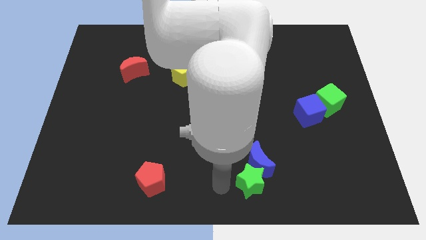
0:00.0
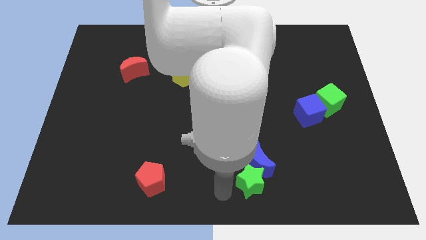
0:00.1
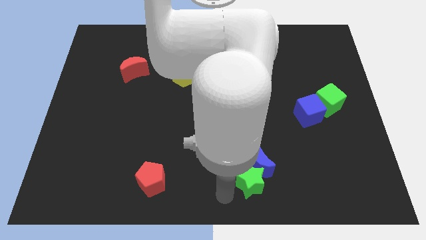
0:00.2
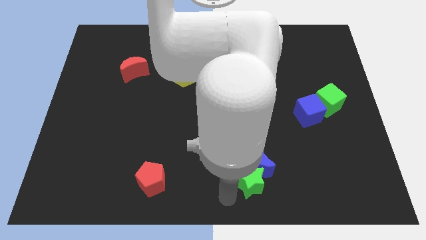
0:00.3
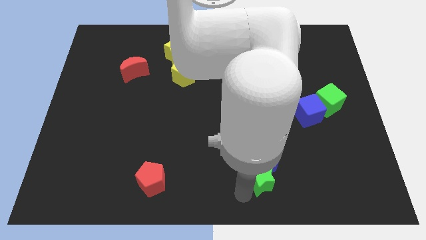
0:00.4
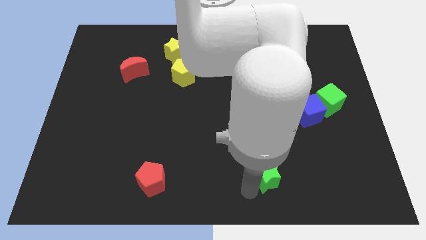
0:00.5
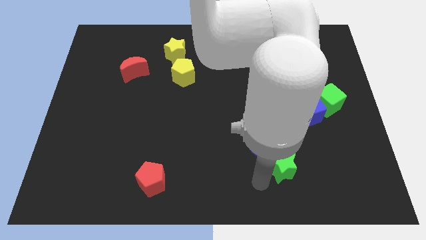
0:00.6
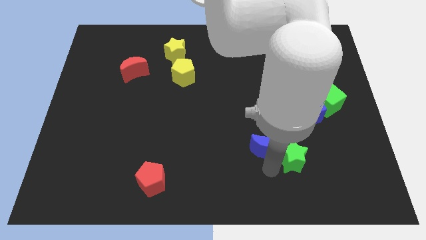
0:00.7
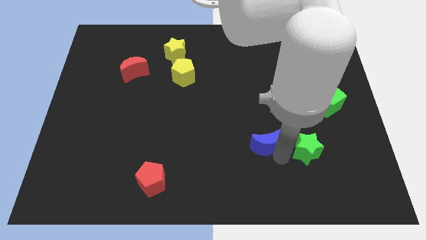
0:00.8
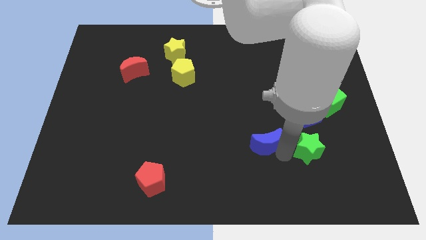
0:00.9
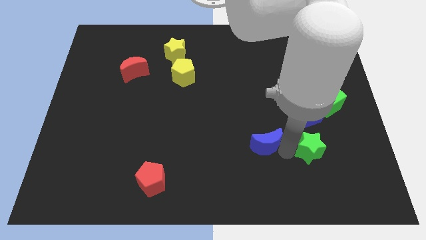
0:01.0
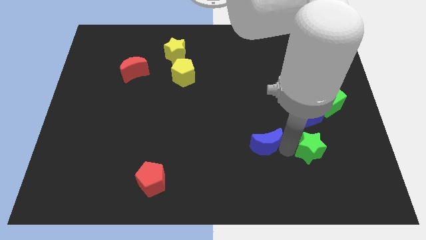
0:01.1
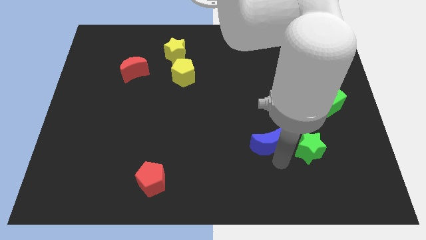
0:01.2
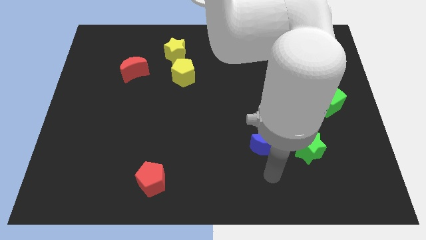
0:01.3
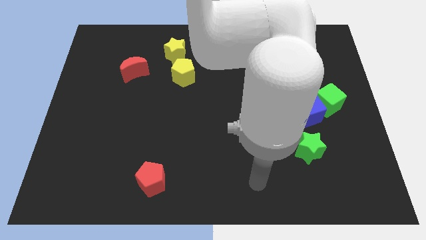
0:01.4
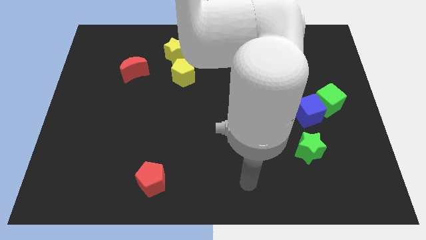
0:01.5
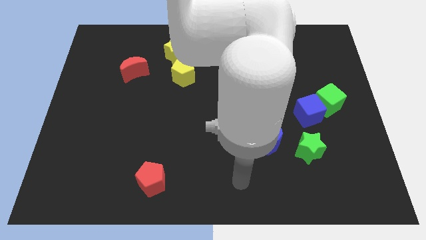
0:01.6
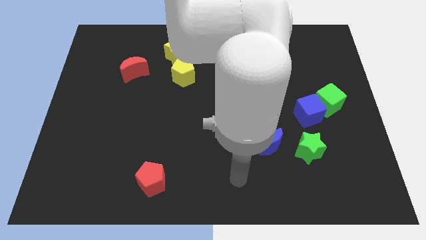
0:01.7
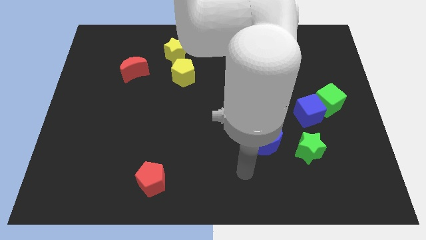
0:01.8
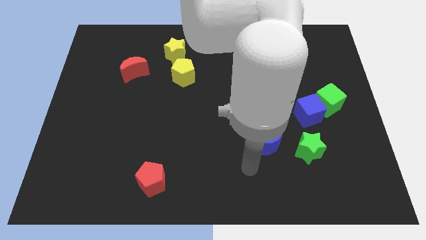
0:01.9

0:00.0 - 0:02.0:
push the green star to the bottom left of blue cube

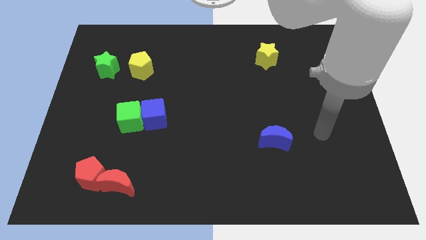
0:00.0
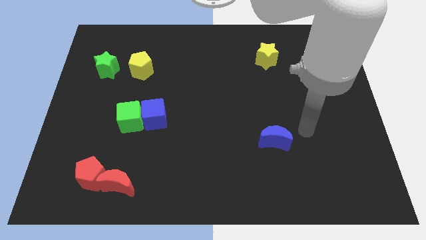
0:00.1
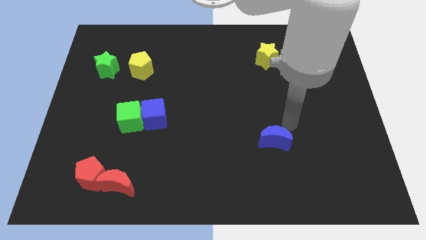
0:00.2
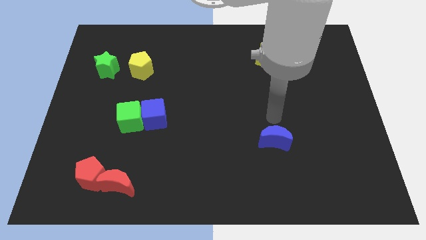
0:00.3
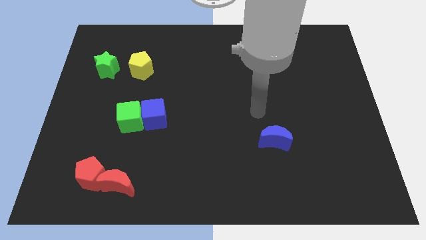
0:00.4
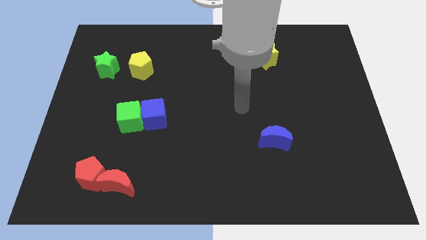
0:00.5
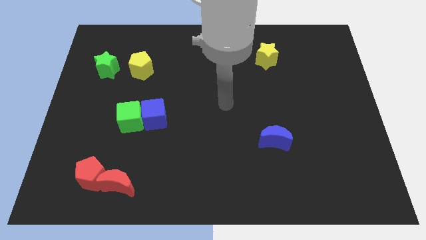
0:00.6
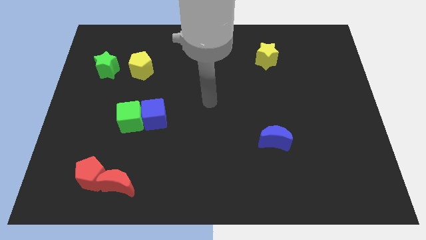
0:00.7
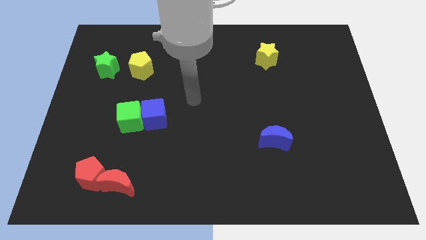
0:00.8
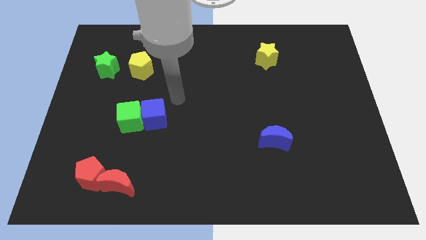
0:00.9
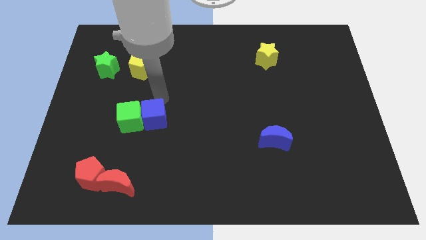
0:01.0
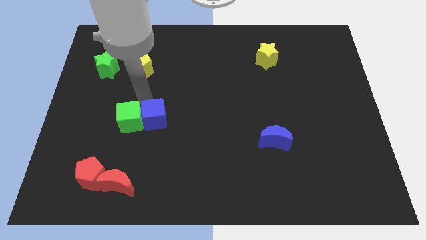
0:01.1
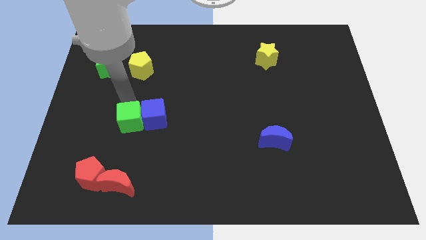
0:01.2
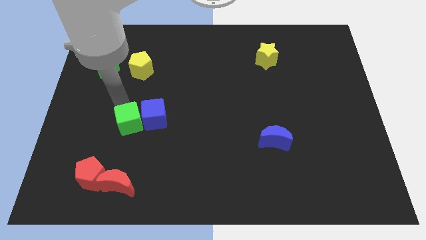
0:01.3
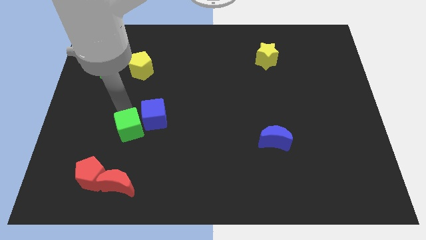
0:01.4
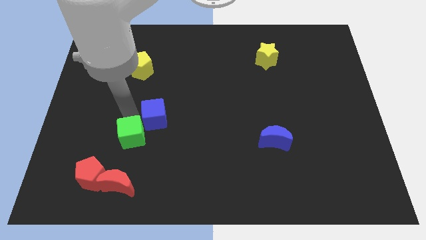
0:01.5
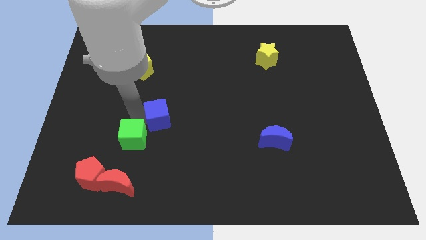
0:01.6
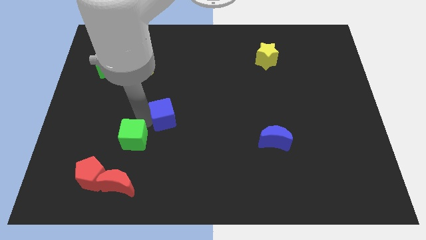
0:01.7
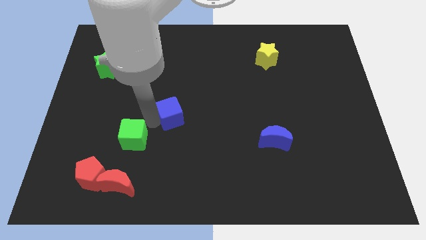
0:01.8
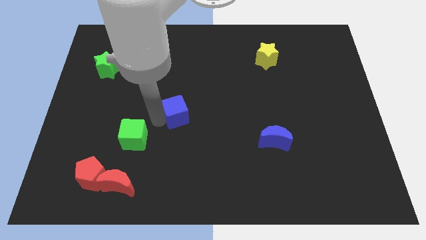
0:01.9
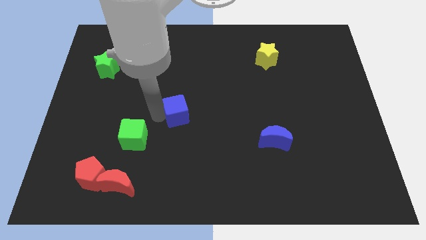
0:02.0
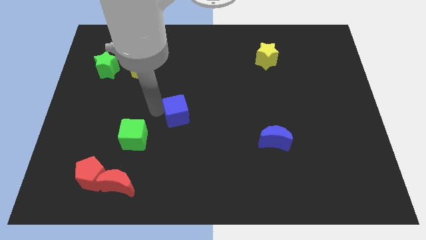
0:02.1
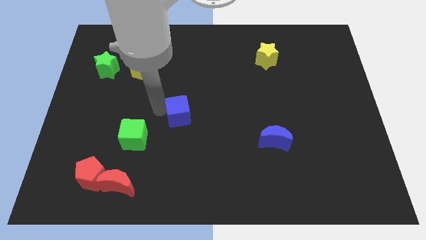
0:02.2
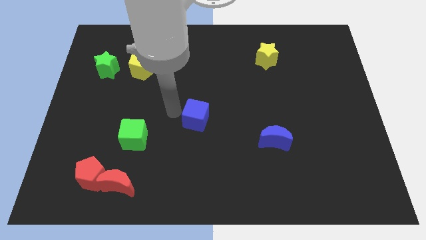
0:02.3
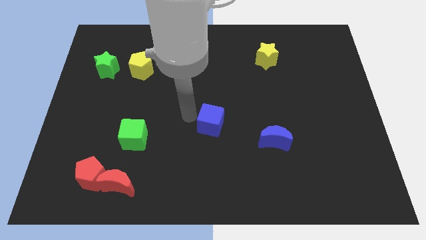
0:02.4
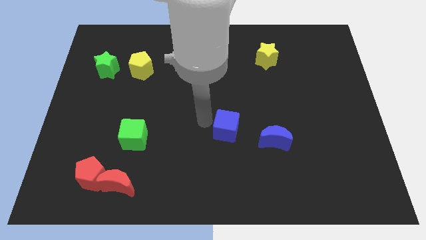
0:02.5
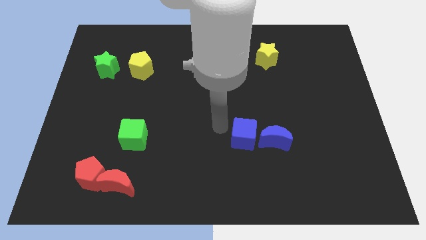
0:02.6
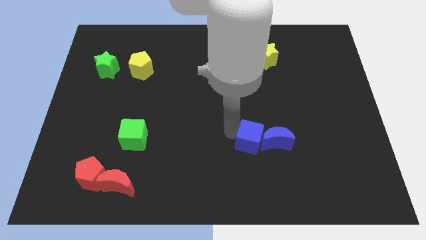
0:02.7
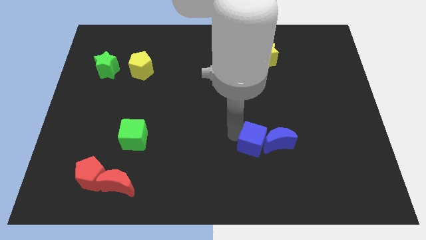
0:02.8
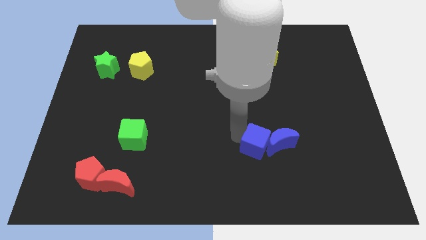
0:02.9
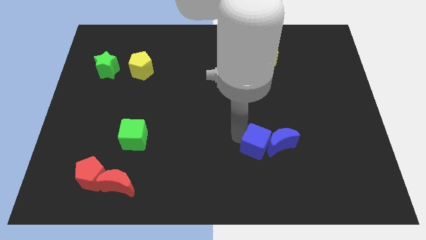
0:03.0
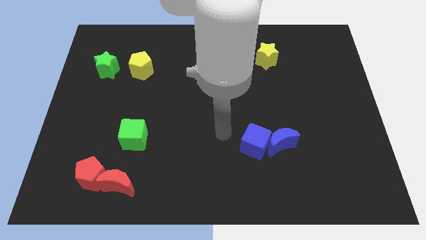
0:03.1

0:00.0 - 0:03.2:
push the blue cube into the blue moon

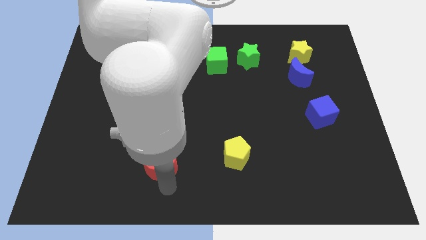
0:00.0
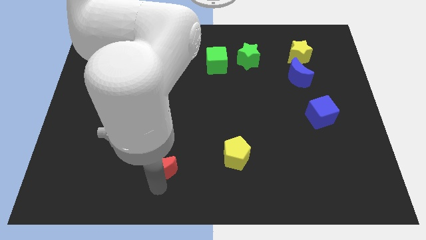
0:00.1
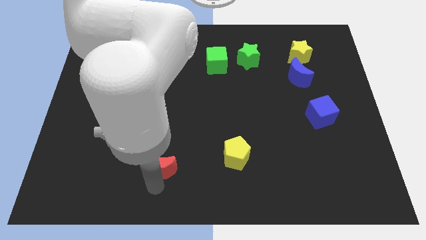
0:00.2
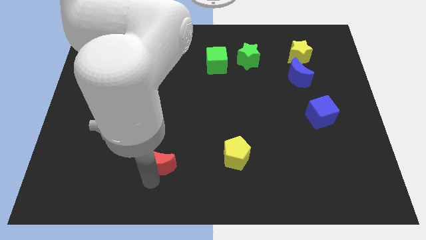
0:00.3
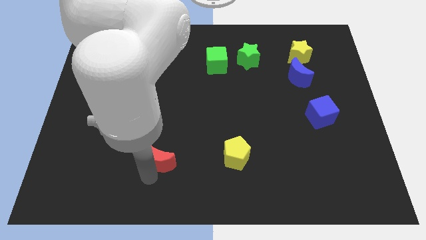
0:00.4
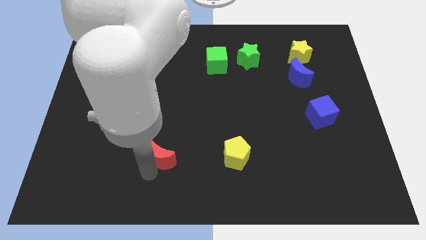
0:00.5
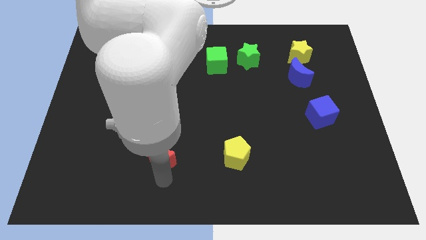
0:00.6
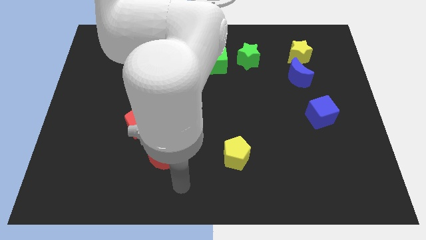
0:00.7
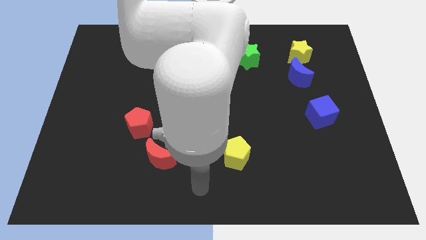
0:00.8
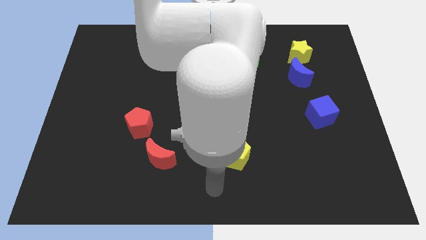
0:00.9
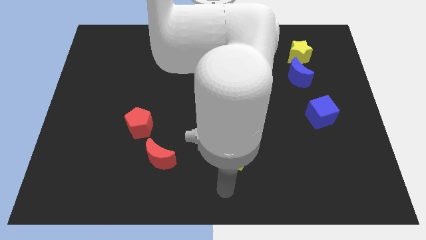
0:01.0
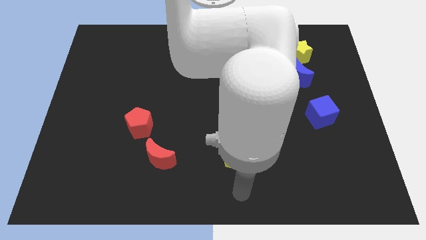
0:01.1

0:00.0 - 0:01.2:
slightly push the red moon up

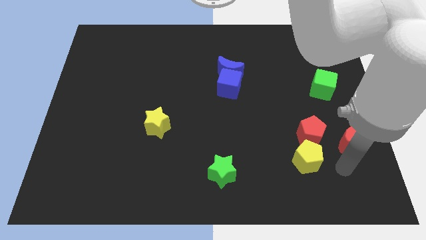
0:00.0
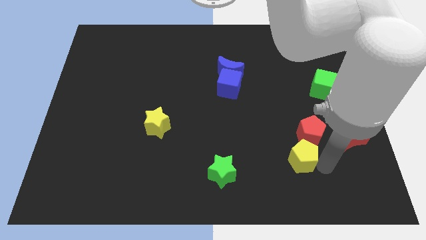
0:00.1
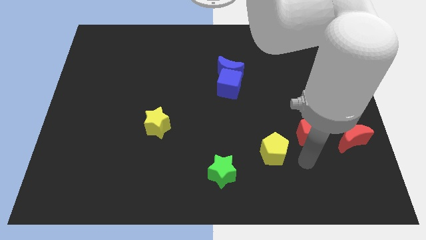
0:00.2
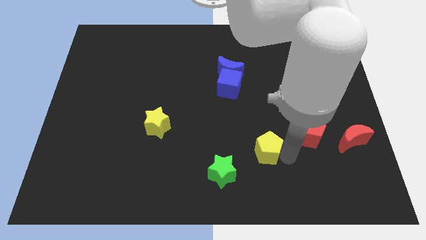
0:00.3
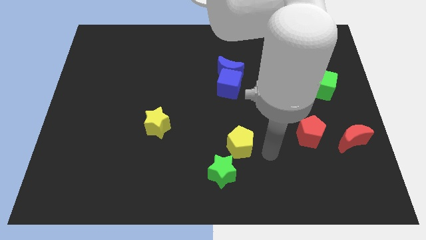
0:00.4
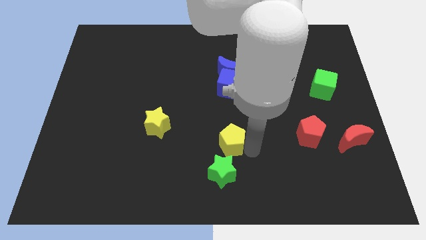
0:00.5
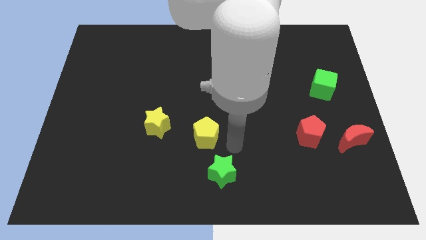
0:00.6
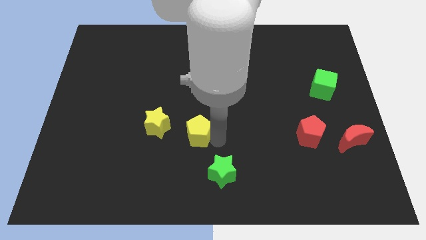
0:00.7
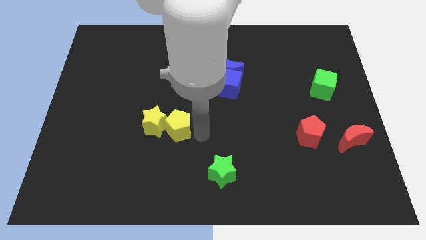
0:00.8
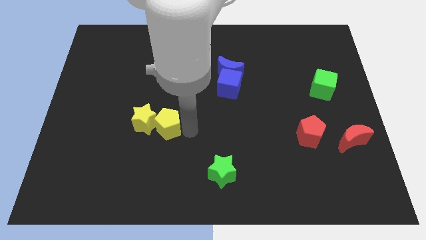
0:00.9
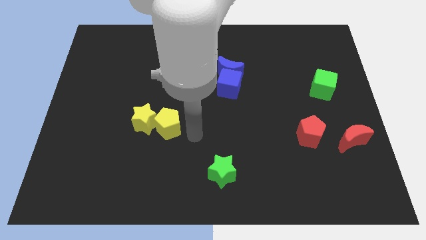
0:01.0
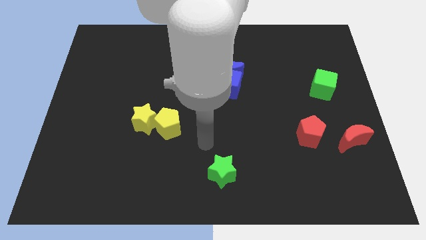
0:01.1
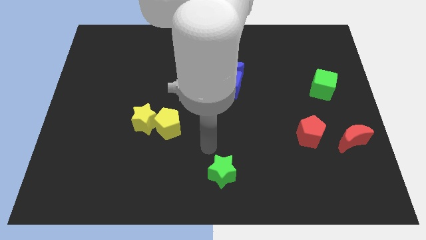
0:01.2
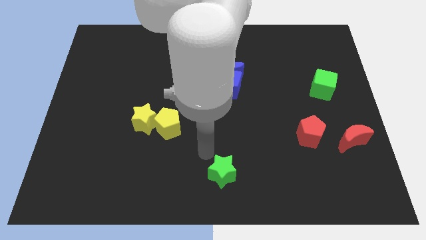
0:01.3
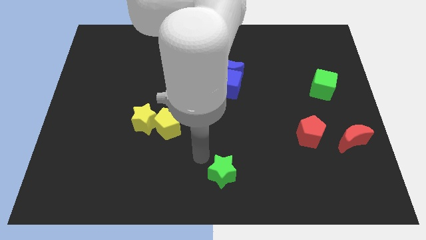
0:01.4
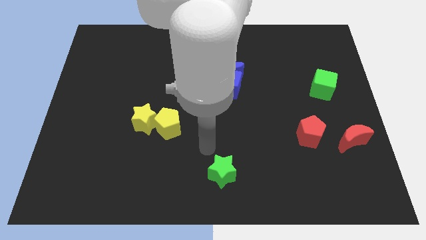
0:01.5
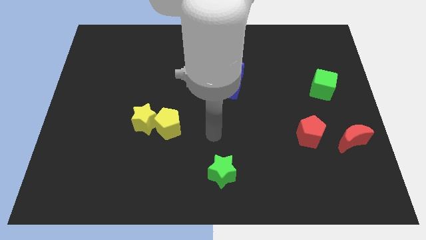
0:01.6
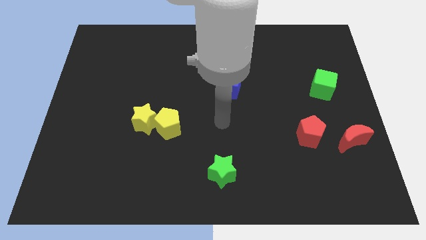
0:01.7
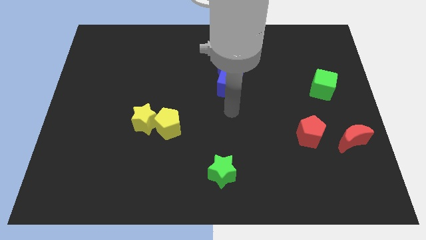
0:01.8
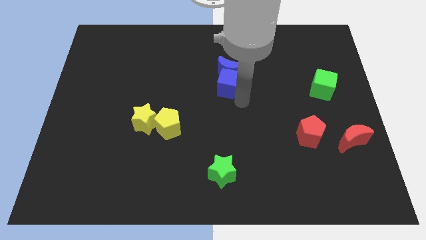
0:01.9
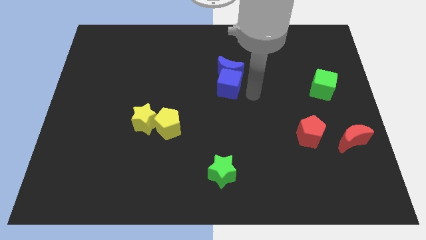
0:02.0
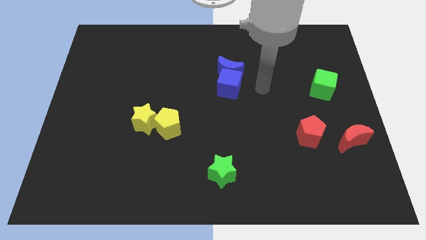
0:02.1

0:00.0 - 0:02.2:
push yellow pentagon into yellow star

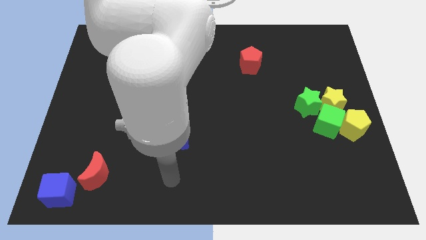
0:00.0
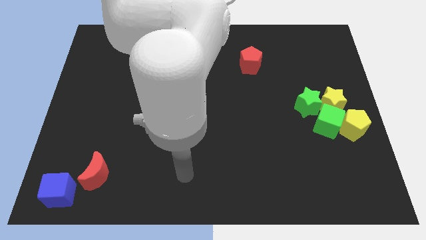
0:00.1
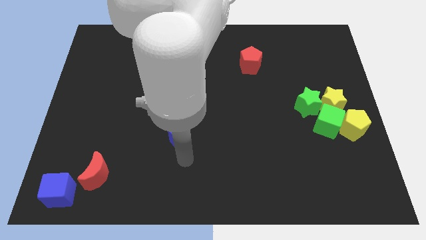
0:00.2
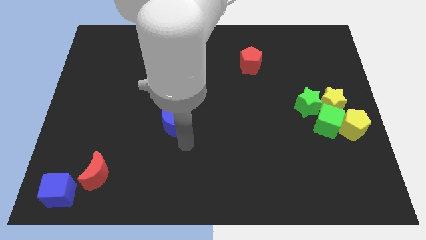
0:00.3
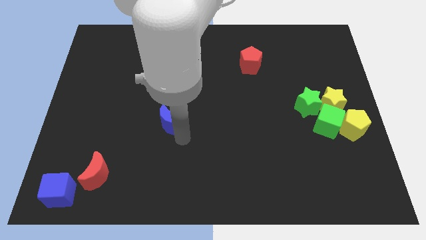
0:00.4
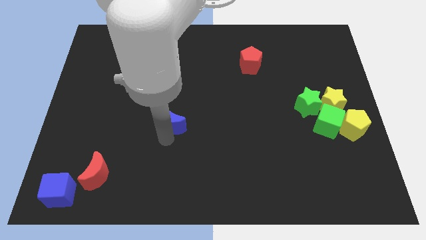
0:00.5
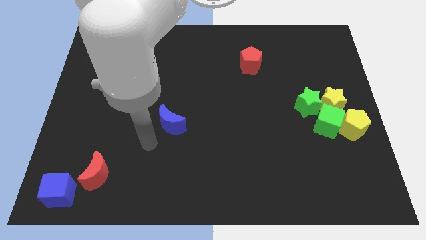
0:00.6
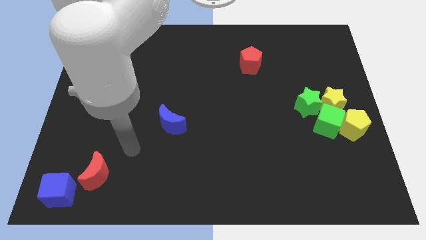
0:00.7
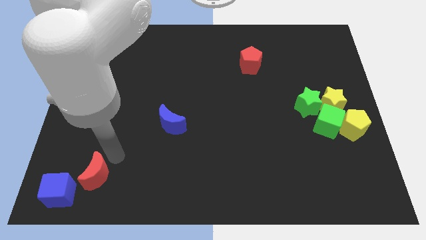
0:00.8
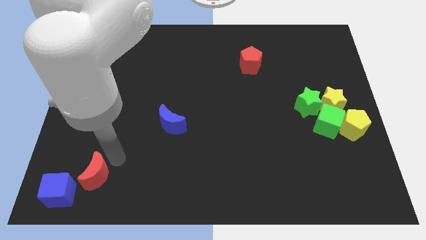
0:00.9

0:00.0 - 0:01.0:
move the blue crescent slightly up
